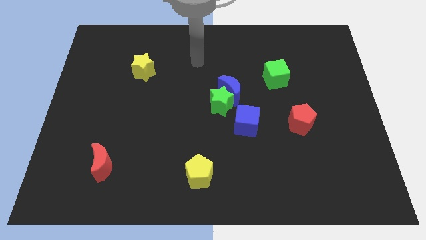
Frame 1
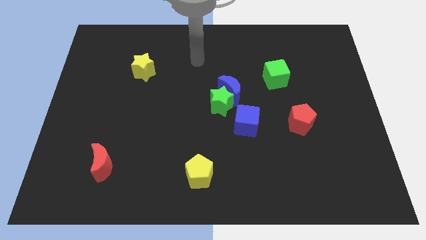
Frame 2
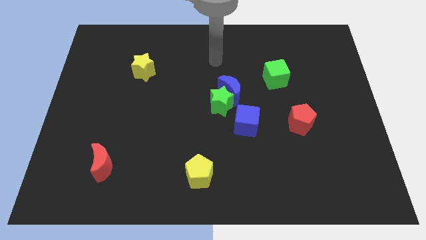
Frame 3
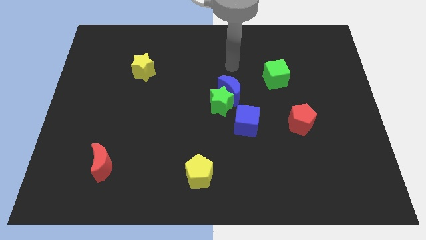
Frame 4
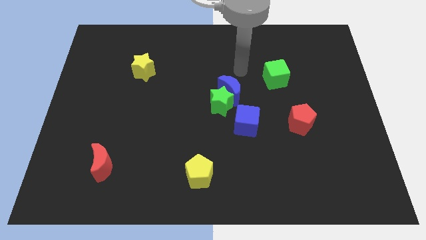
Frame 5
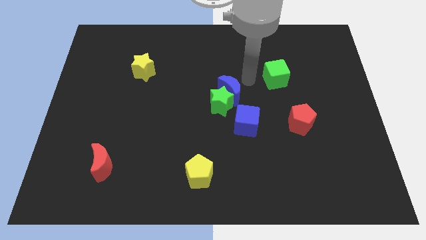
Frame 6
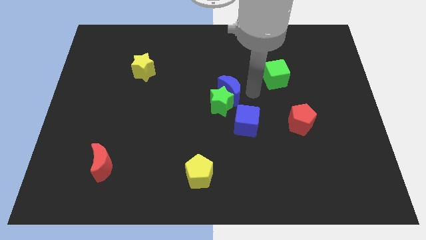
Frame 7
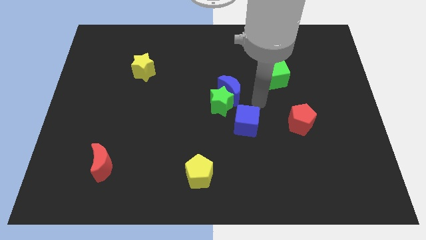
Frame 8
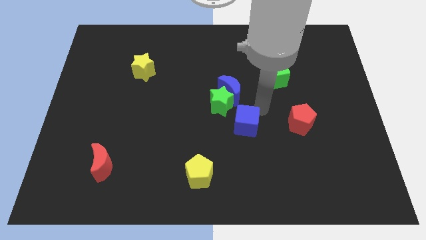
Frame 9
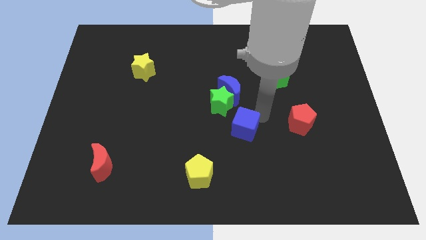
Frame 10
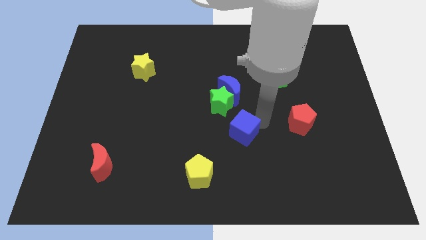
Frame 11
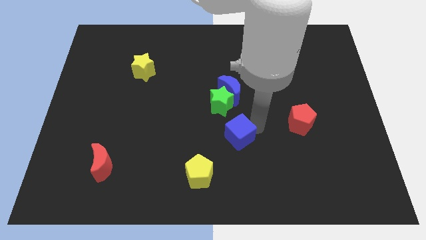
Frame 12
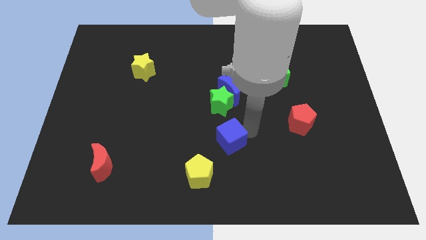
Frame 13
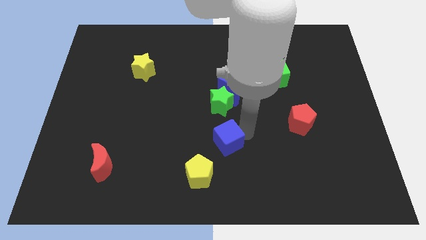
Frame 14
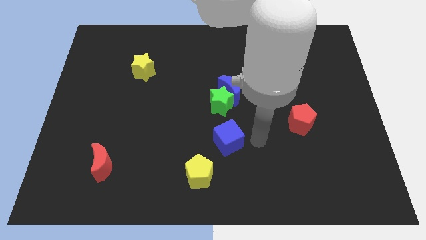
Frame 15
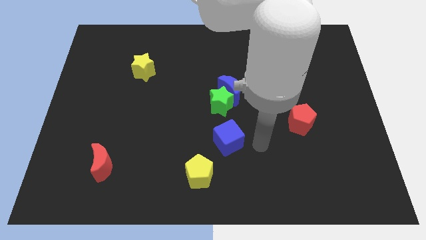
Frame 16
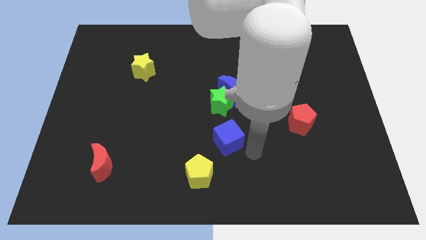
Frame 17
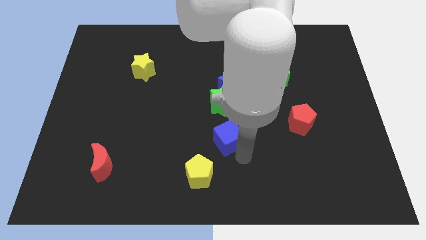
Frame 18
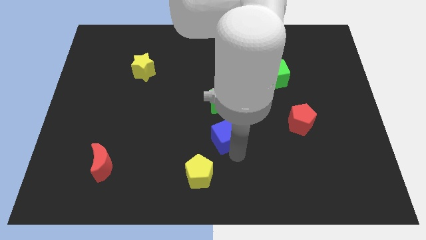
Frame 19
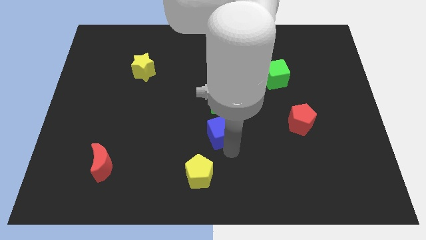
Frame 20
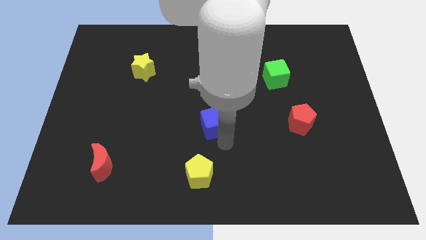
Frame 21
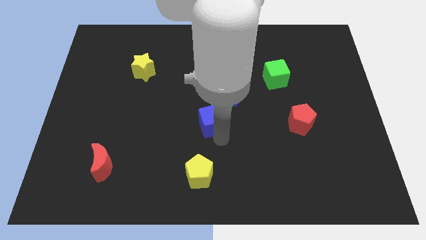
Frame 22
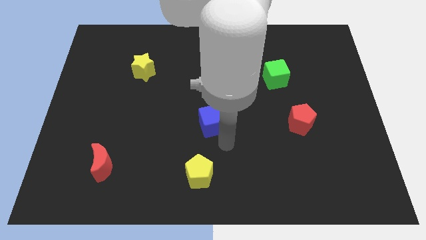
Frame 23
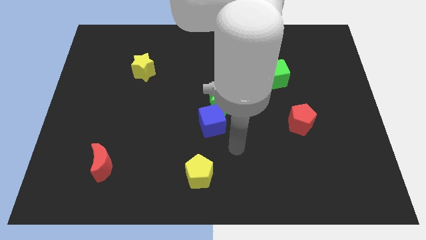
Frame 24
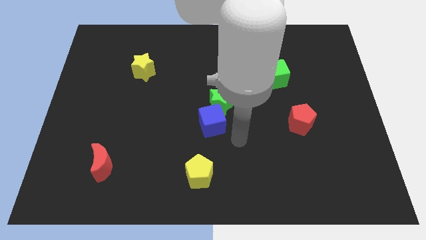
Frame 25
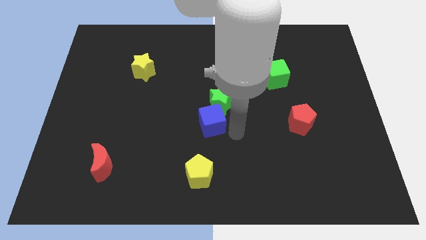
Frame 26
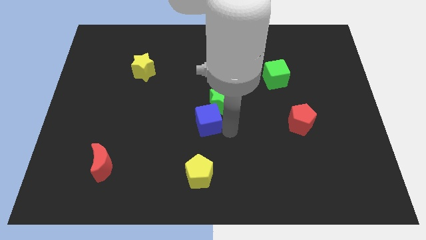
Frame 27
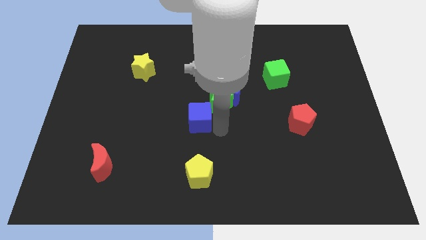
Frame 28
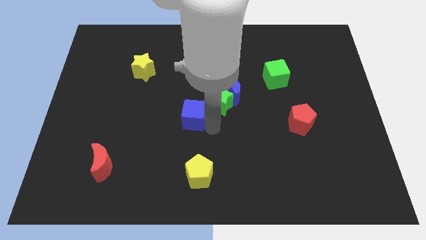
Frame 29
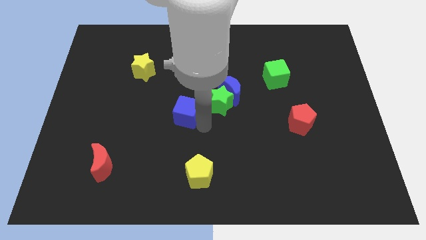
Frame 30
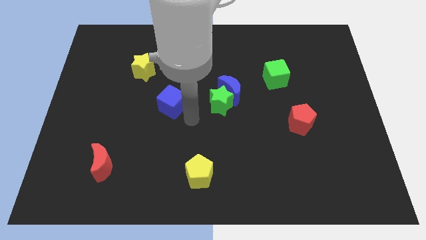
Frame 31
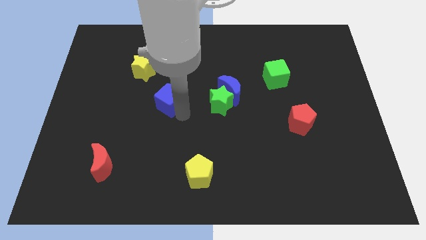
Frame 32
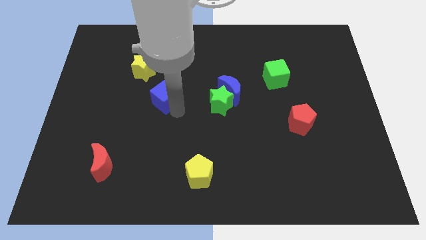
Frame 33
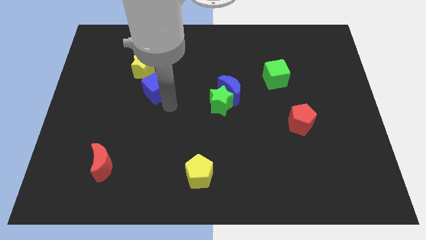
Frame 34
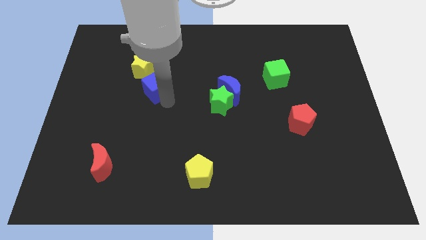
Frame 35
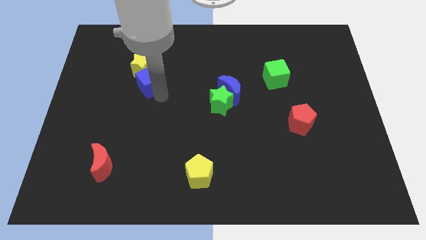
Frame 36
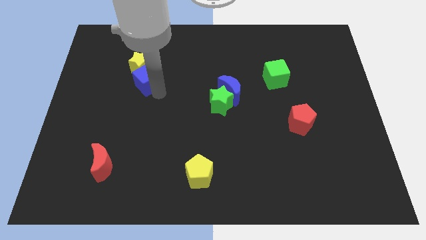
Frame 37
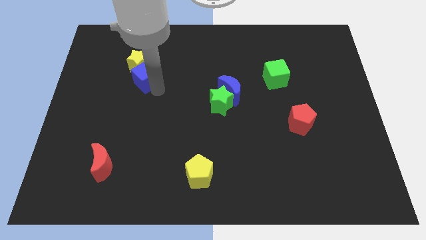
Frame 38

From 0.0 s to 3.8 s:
push the blue cube next to the yellow star

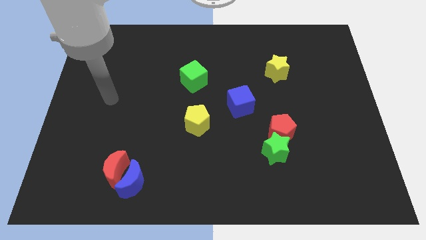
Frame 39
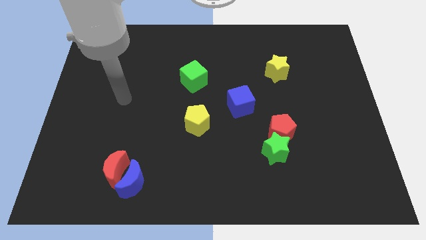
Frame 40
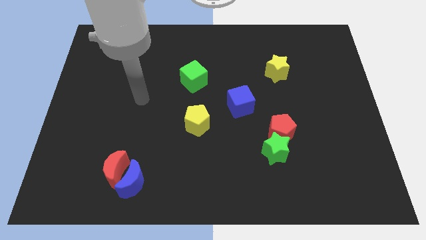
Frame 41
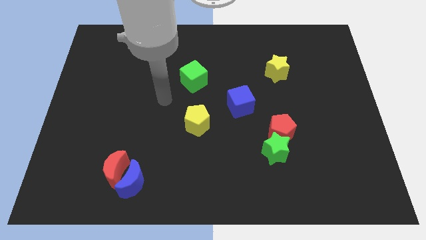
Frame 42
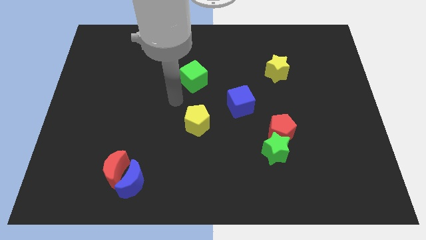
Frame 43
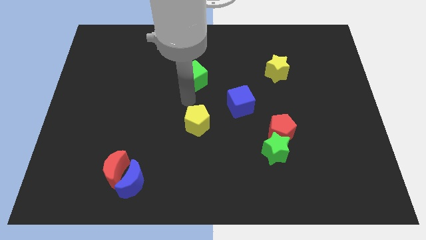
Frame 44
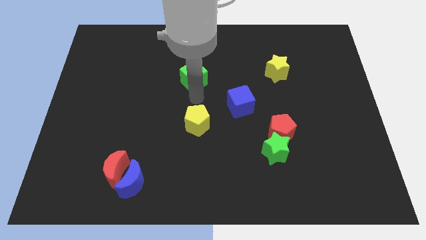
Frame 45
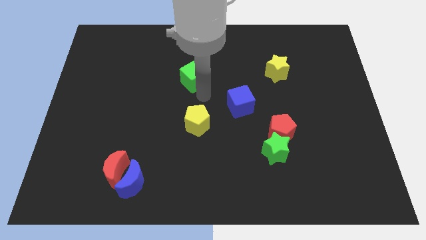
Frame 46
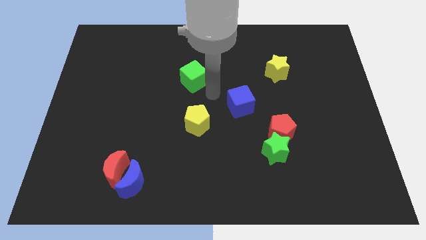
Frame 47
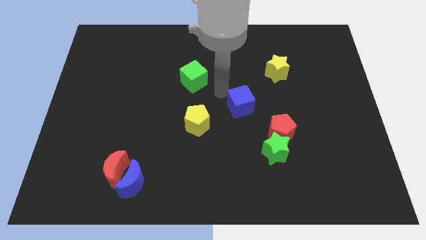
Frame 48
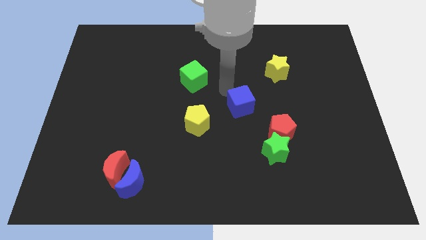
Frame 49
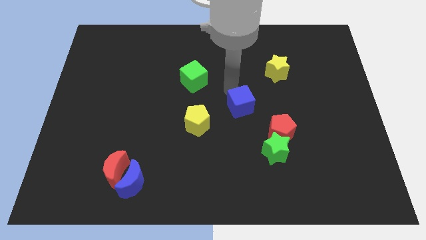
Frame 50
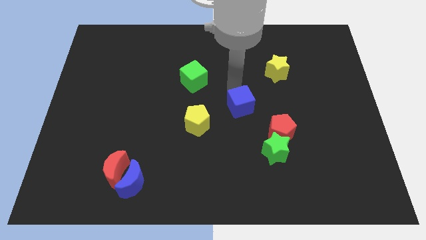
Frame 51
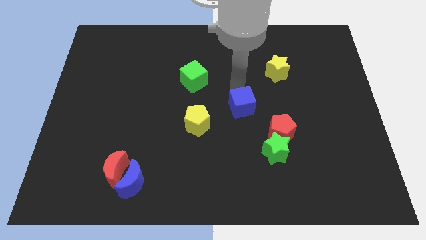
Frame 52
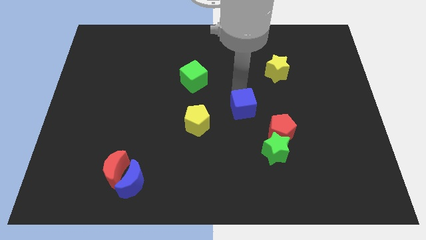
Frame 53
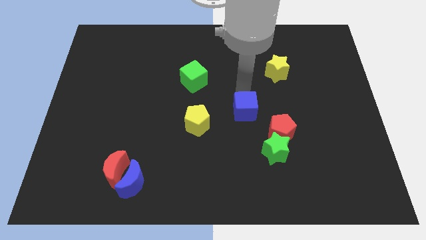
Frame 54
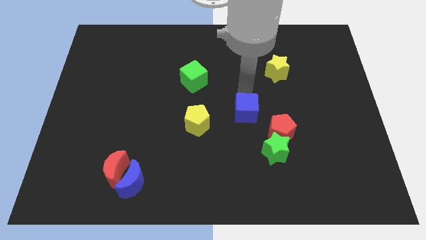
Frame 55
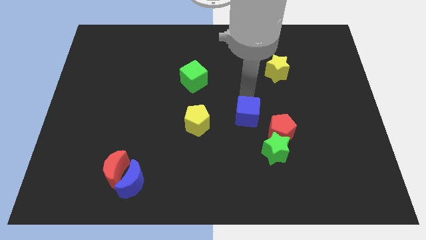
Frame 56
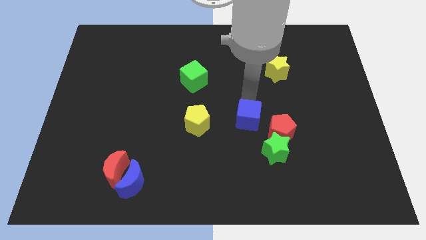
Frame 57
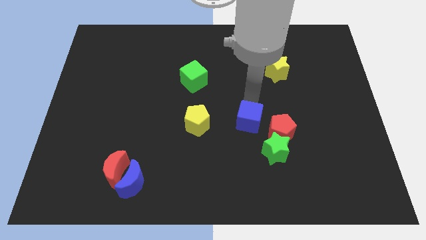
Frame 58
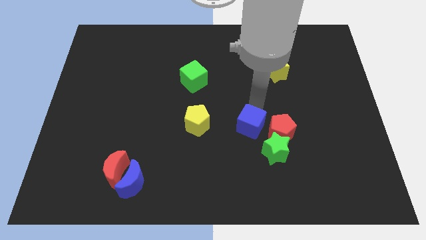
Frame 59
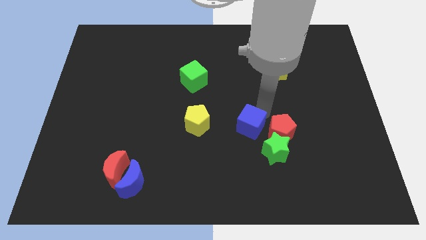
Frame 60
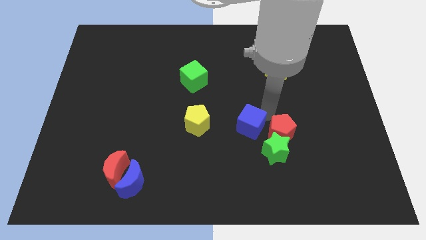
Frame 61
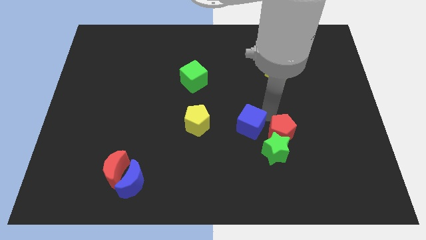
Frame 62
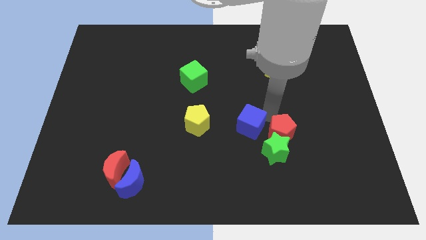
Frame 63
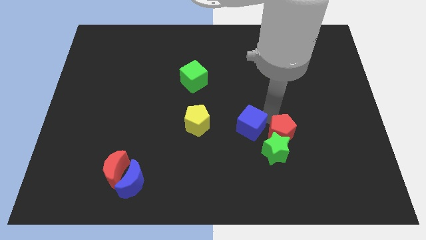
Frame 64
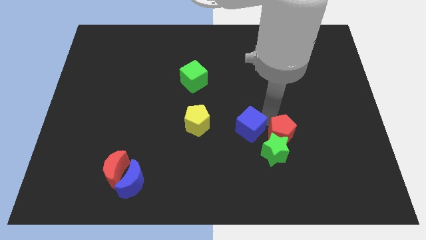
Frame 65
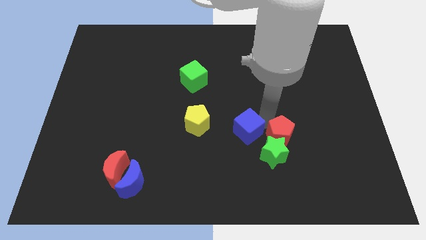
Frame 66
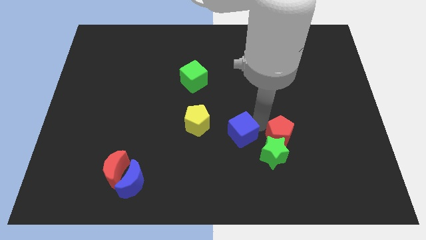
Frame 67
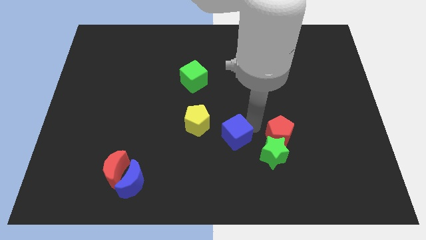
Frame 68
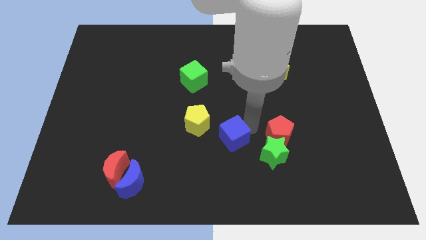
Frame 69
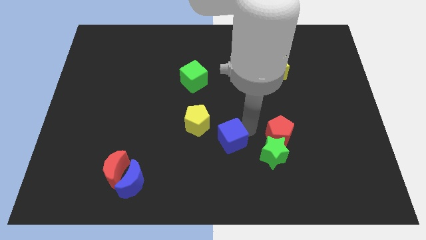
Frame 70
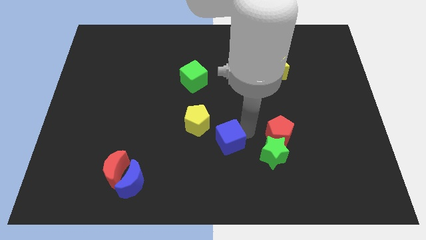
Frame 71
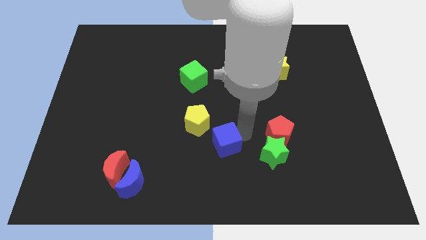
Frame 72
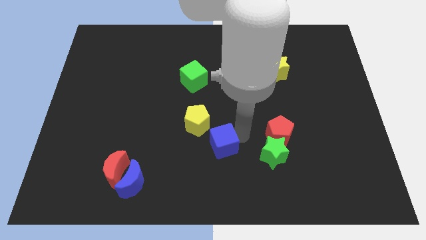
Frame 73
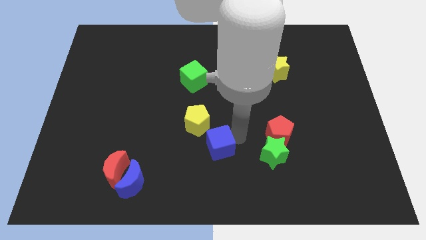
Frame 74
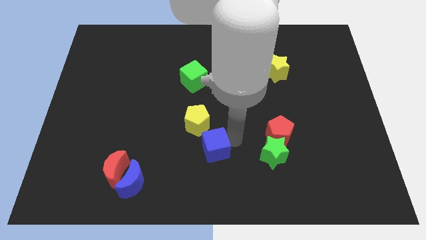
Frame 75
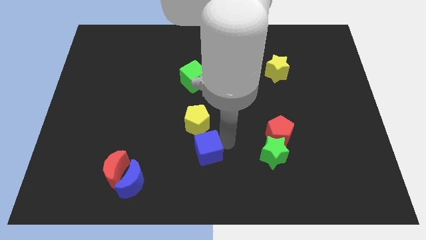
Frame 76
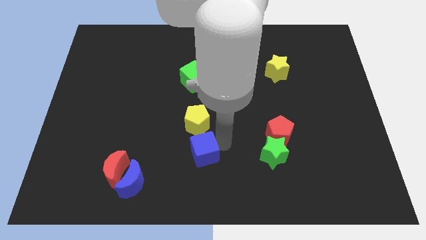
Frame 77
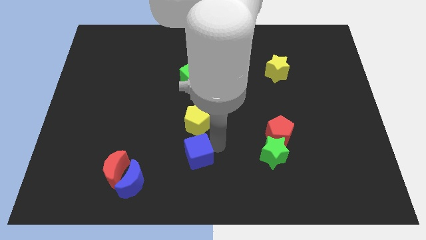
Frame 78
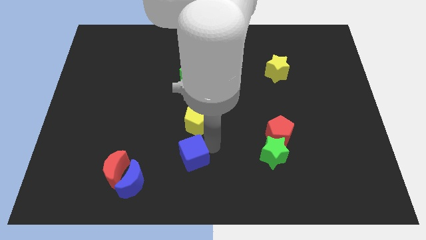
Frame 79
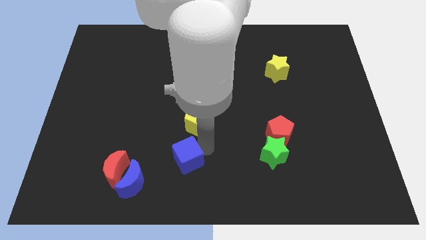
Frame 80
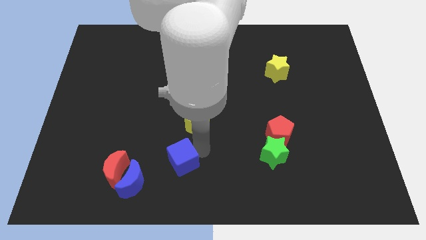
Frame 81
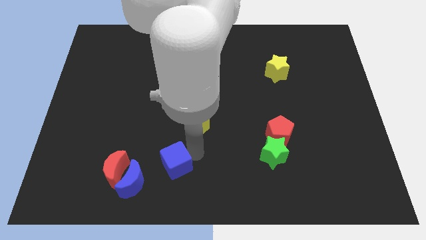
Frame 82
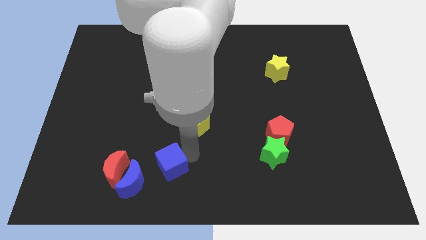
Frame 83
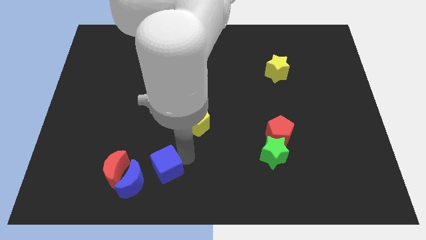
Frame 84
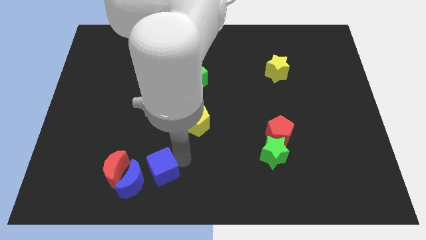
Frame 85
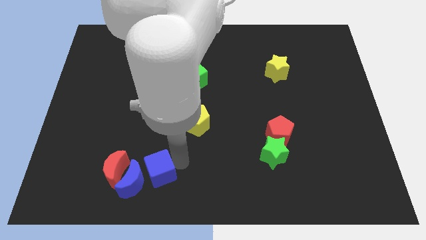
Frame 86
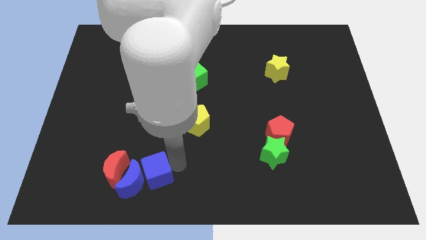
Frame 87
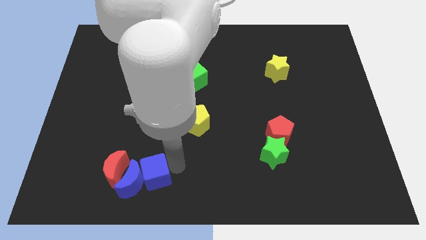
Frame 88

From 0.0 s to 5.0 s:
put the blue cube to the blue moon
